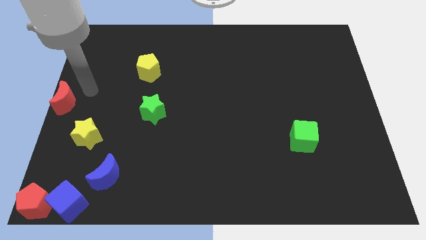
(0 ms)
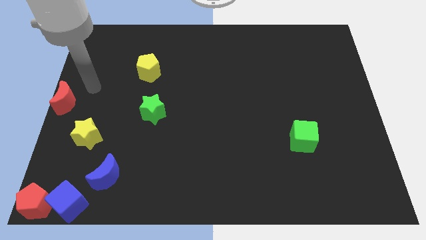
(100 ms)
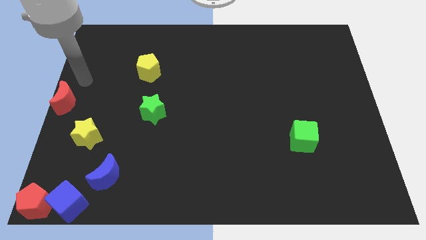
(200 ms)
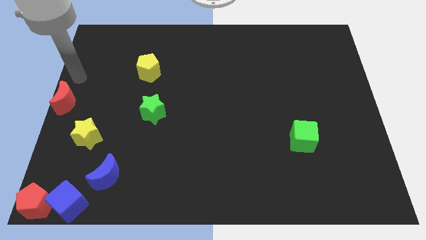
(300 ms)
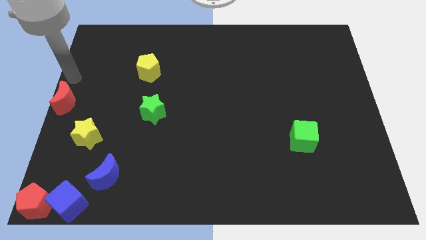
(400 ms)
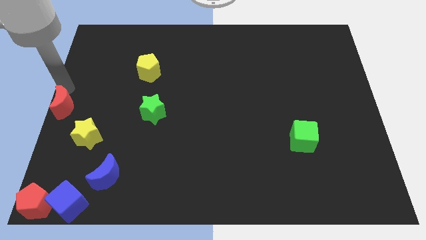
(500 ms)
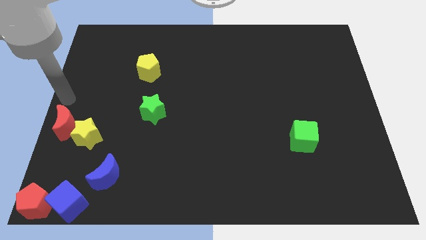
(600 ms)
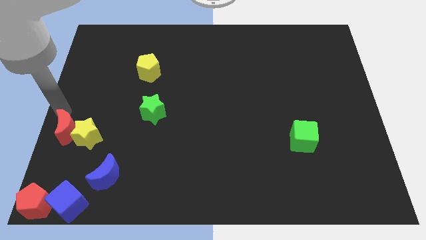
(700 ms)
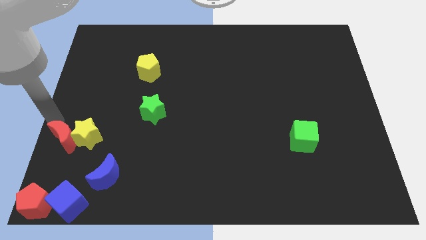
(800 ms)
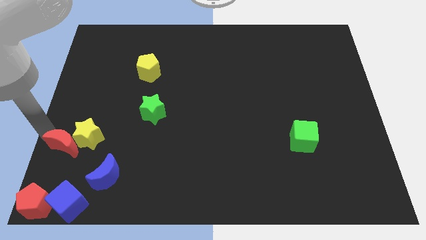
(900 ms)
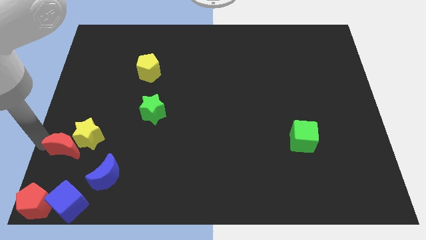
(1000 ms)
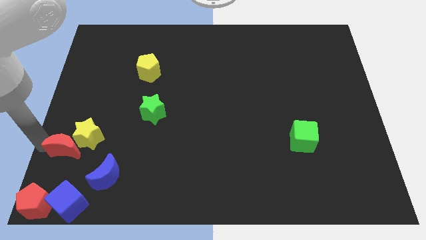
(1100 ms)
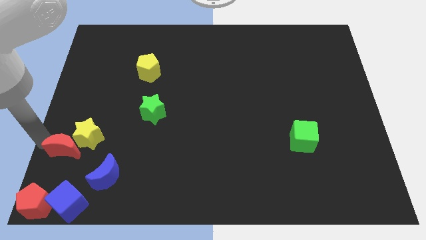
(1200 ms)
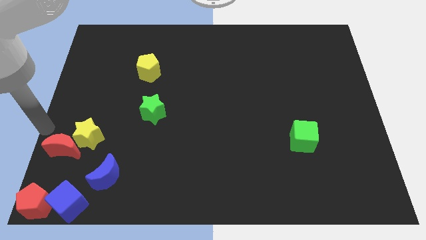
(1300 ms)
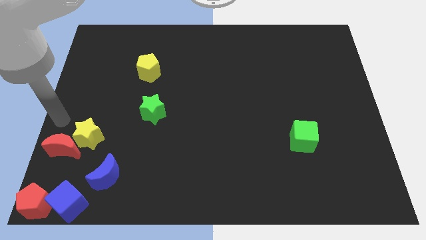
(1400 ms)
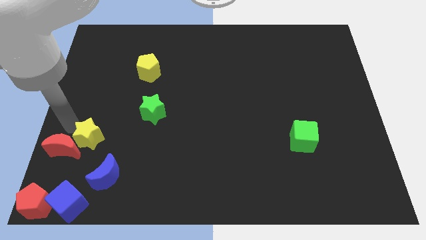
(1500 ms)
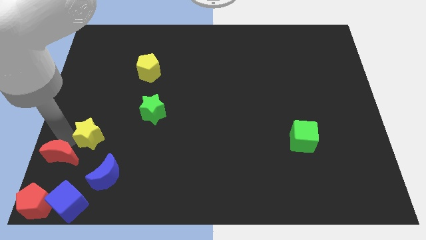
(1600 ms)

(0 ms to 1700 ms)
place the red moon above the red pentagon

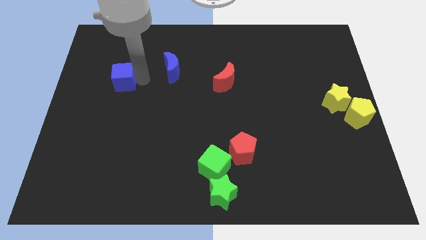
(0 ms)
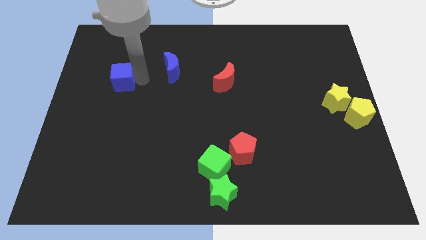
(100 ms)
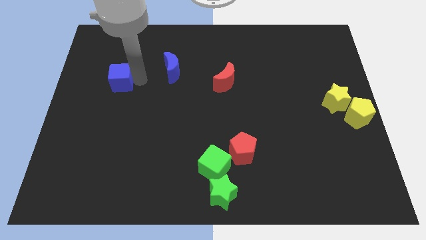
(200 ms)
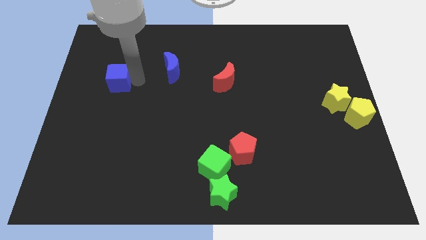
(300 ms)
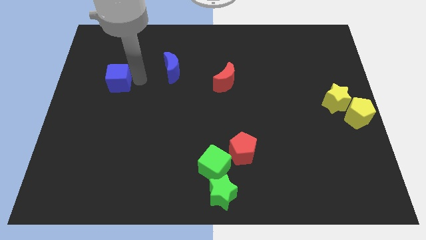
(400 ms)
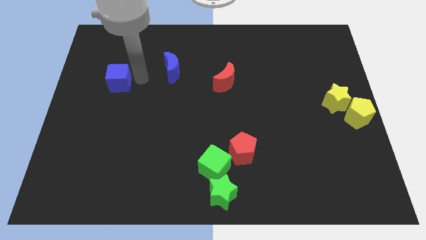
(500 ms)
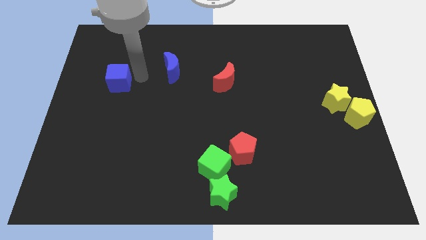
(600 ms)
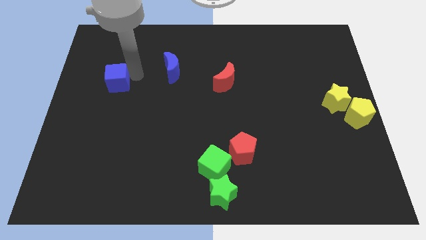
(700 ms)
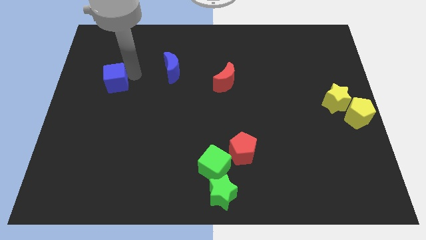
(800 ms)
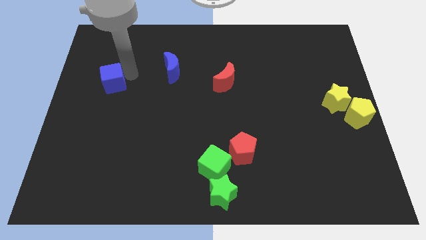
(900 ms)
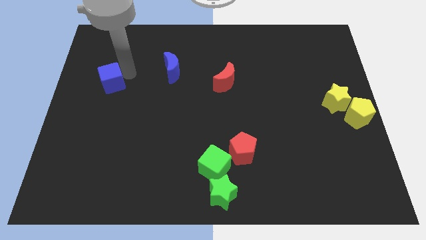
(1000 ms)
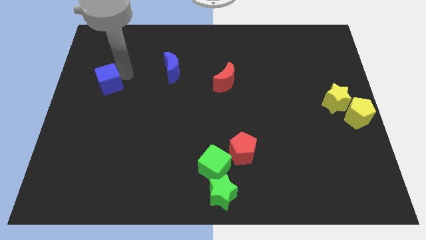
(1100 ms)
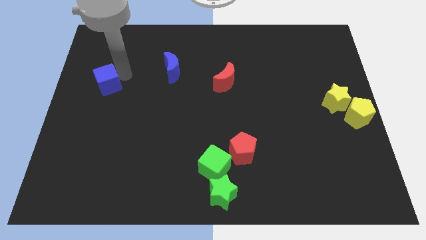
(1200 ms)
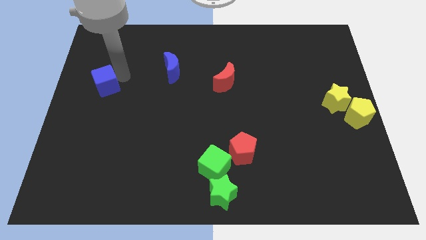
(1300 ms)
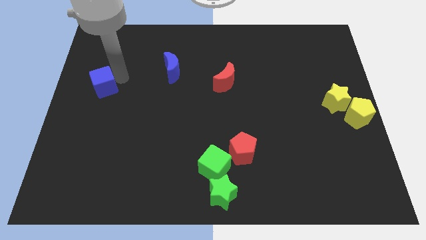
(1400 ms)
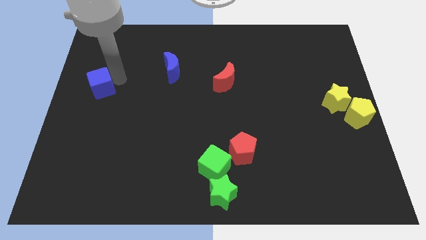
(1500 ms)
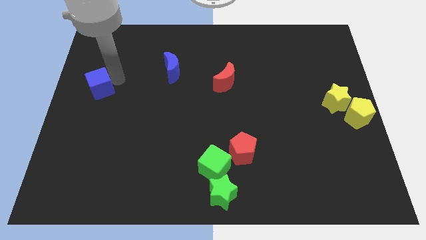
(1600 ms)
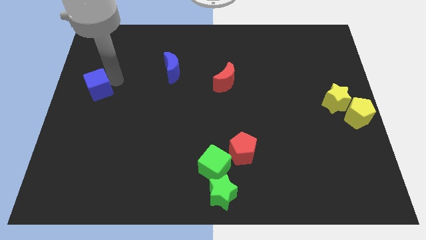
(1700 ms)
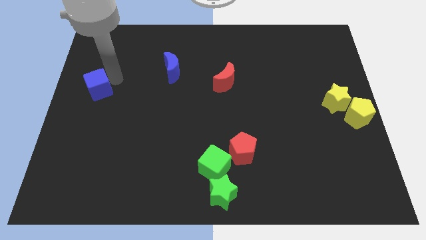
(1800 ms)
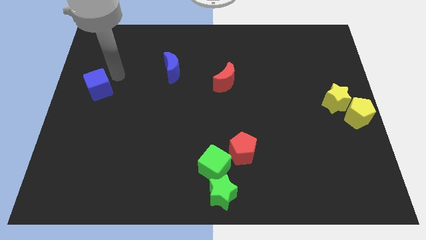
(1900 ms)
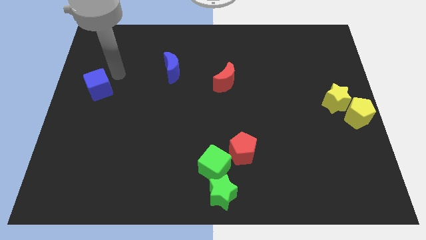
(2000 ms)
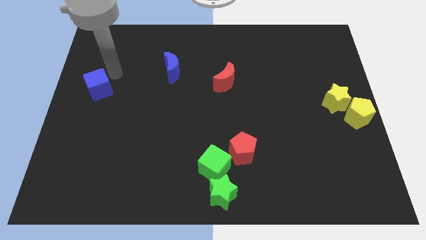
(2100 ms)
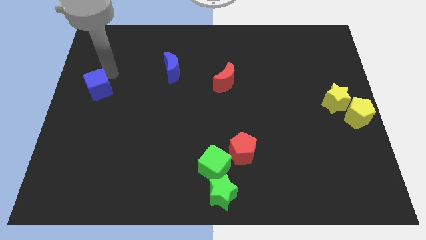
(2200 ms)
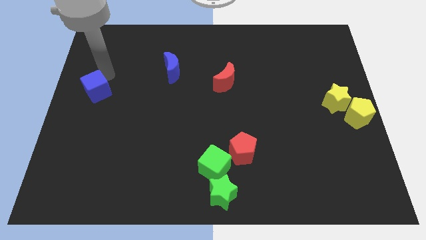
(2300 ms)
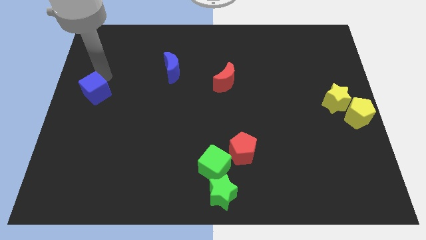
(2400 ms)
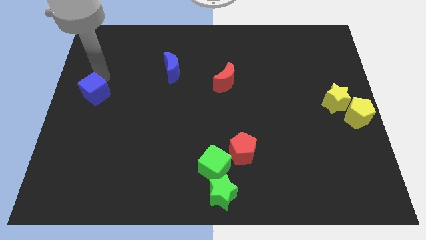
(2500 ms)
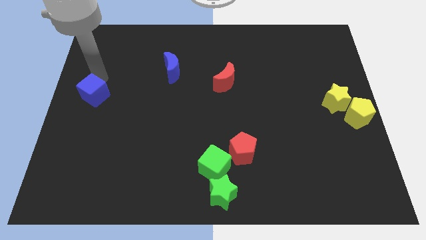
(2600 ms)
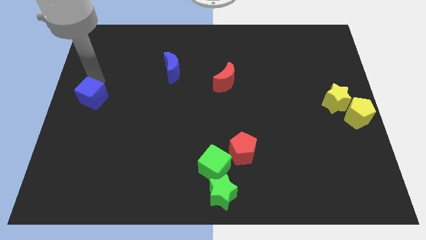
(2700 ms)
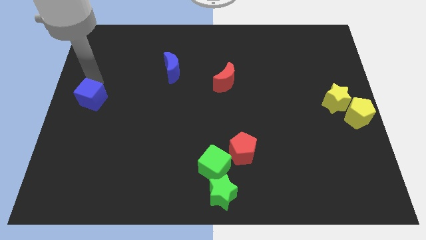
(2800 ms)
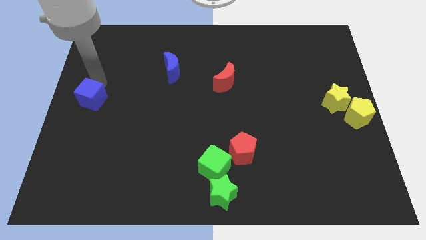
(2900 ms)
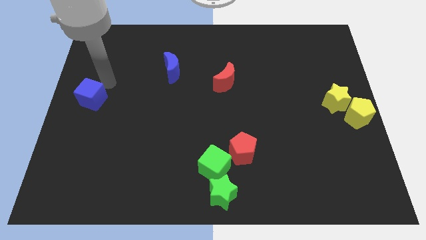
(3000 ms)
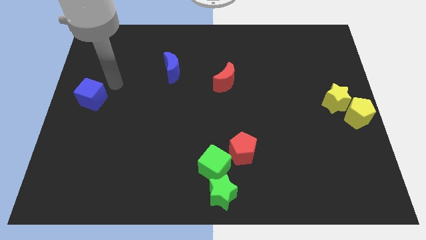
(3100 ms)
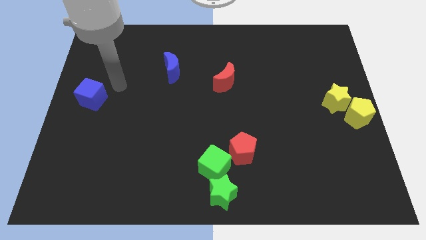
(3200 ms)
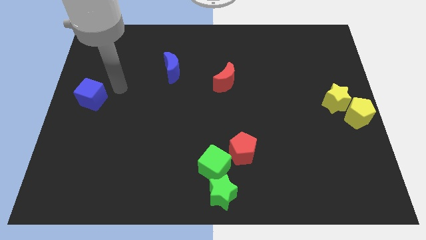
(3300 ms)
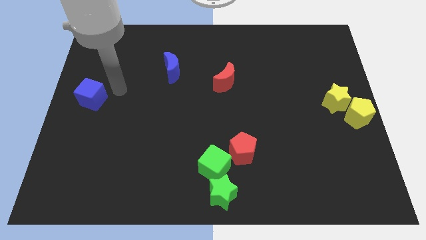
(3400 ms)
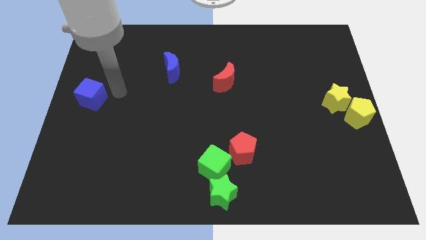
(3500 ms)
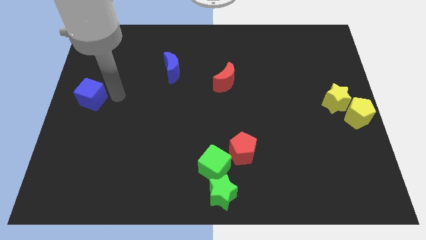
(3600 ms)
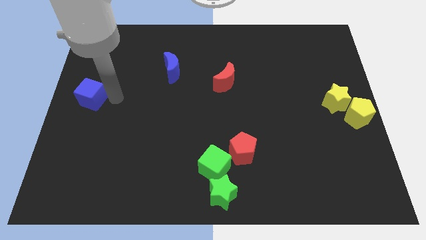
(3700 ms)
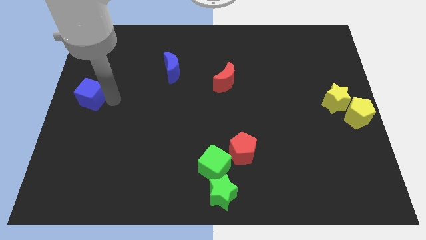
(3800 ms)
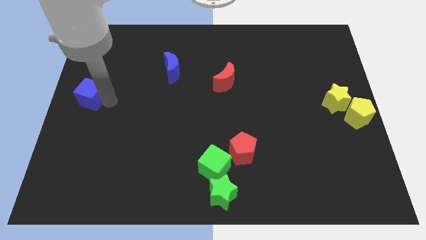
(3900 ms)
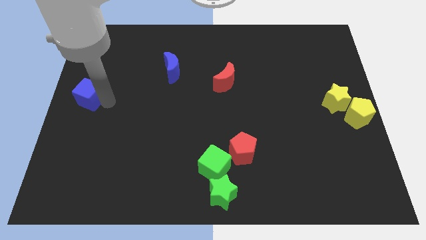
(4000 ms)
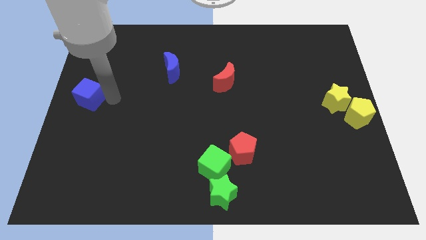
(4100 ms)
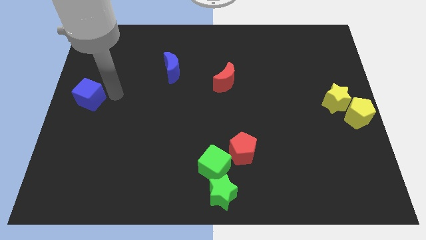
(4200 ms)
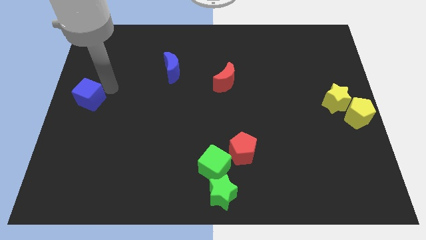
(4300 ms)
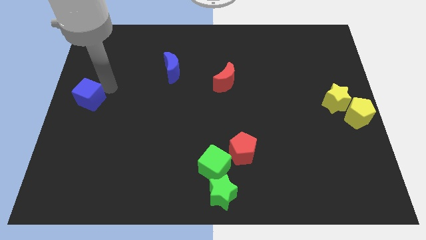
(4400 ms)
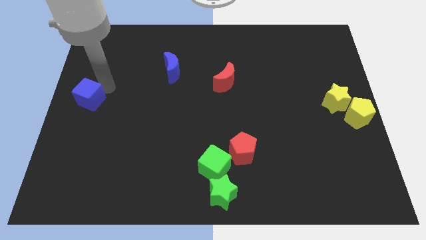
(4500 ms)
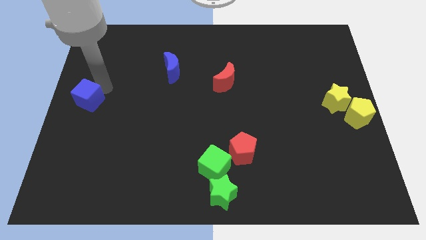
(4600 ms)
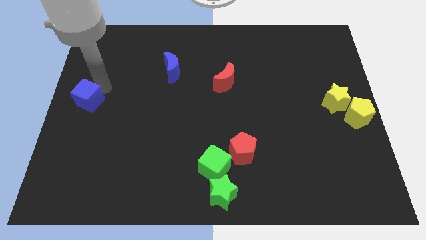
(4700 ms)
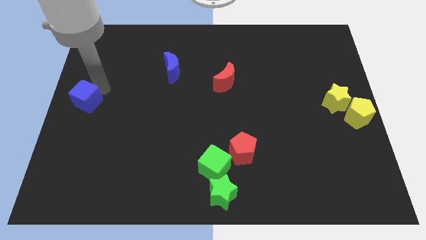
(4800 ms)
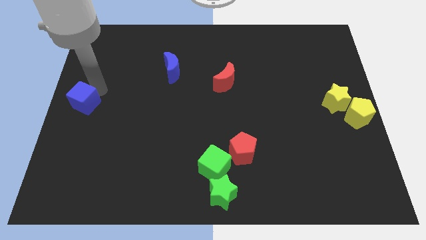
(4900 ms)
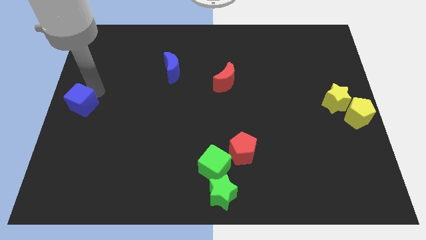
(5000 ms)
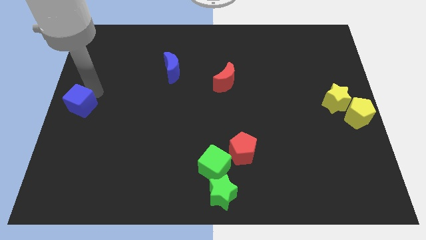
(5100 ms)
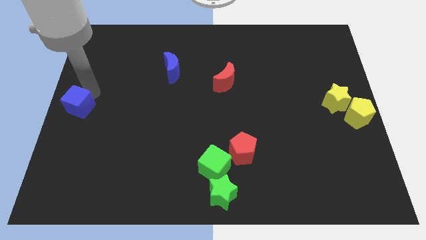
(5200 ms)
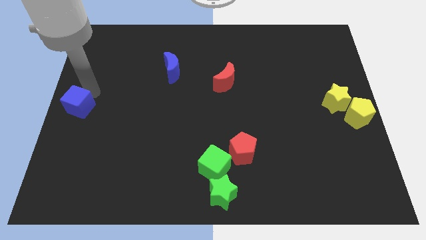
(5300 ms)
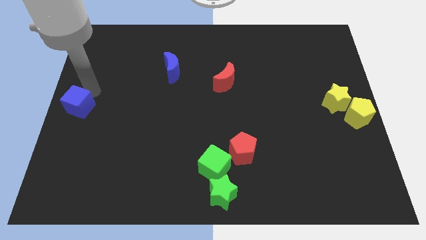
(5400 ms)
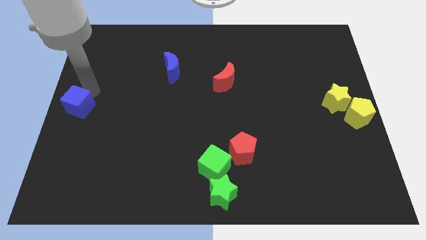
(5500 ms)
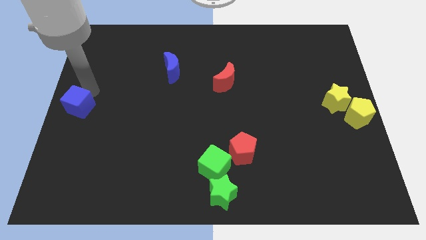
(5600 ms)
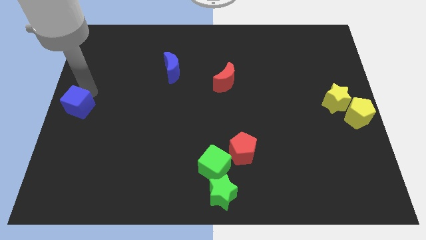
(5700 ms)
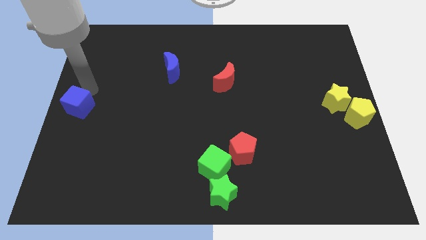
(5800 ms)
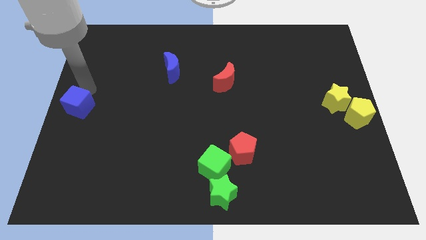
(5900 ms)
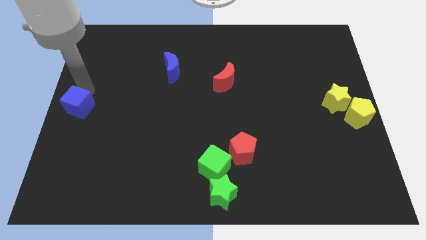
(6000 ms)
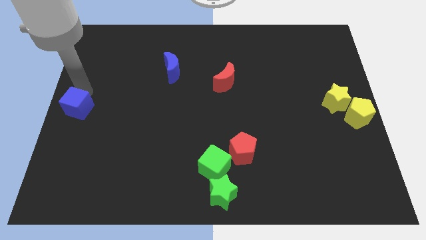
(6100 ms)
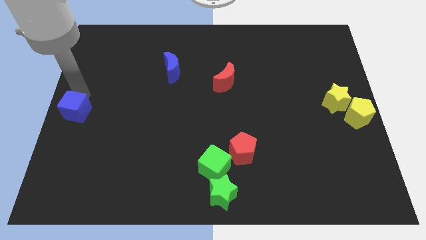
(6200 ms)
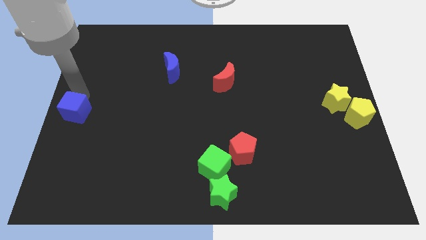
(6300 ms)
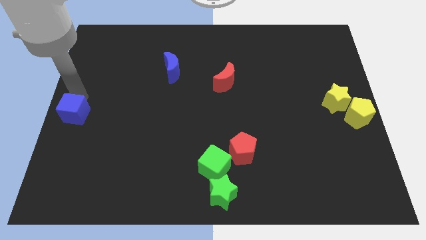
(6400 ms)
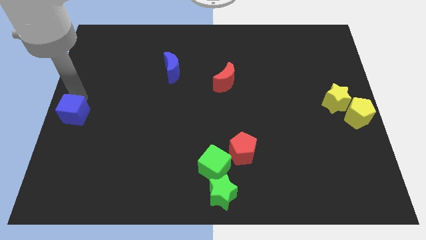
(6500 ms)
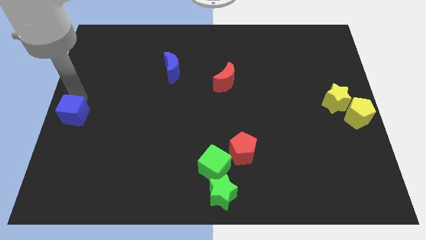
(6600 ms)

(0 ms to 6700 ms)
push the blue cube to the middle left of the board

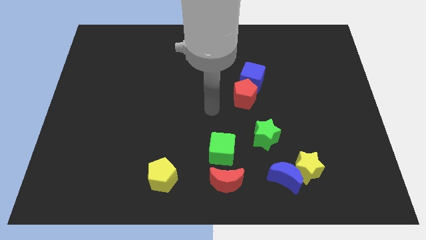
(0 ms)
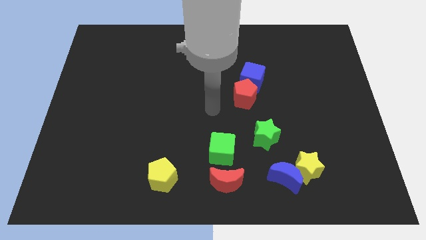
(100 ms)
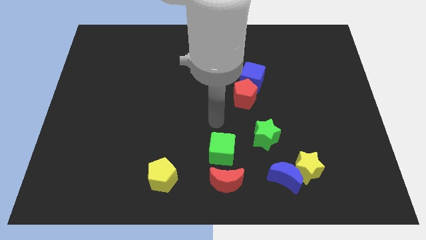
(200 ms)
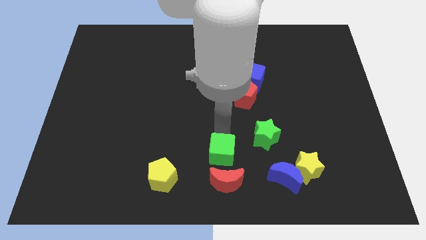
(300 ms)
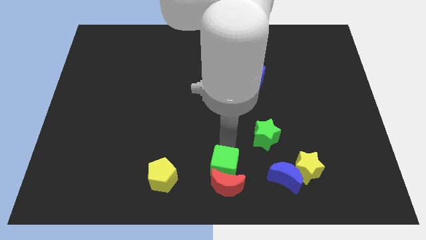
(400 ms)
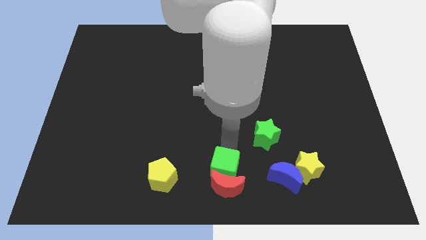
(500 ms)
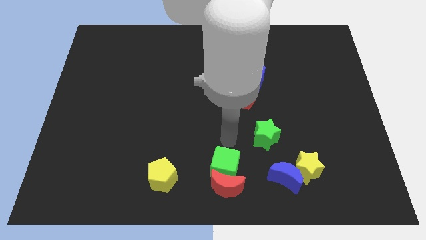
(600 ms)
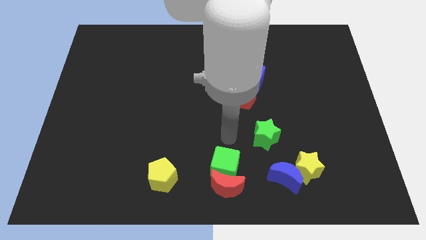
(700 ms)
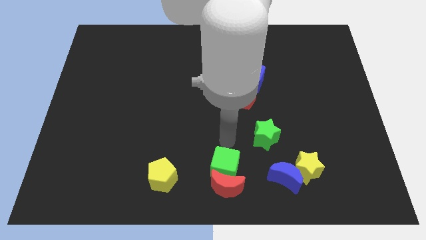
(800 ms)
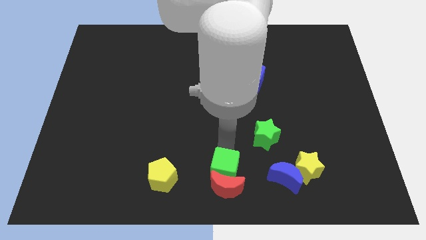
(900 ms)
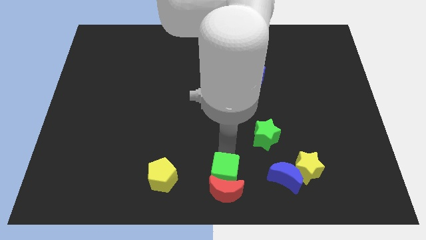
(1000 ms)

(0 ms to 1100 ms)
push the green cube into the red crescent
